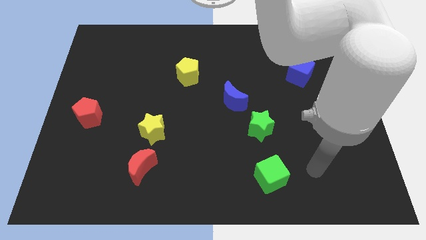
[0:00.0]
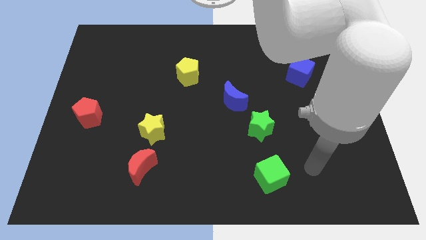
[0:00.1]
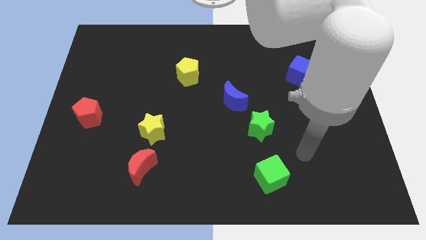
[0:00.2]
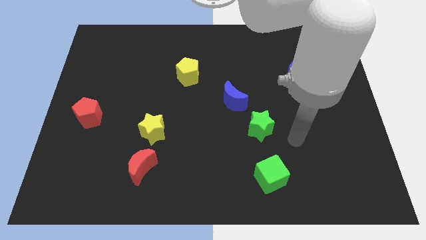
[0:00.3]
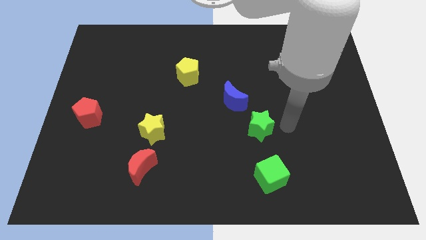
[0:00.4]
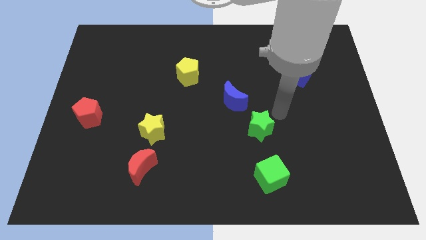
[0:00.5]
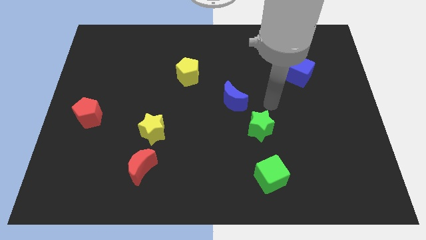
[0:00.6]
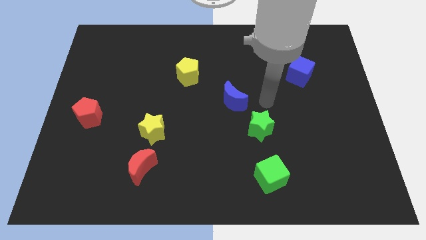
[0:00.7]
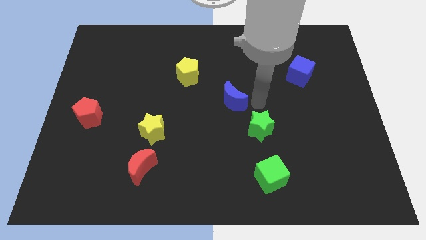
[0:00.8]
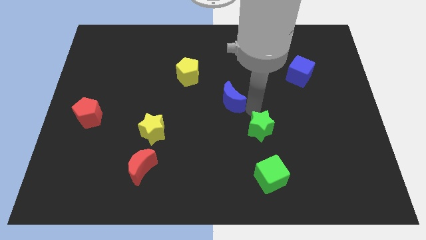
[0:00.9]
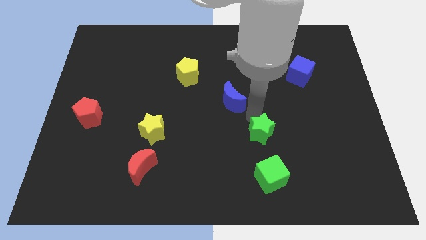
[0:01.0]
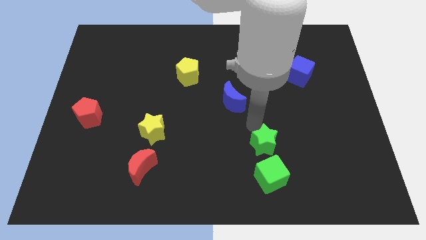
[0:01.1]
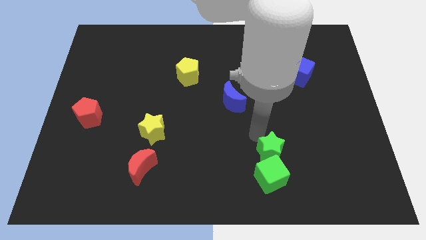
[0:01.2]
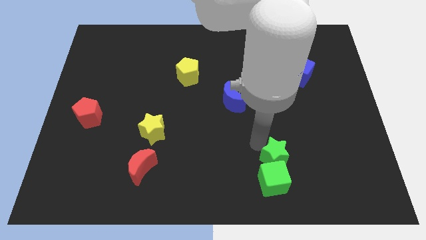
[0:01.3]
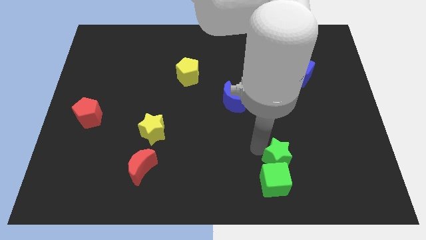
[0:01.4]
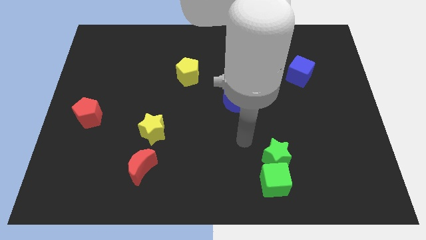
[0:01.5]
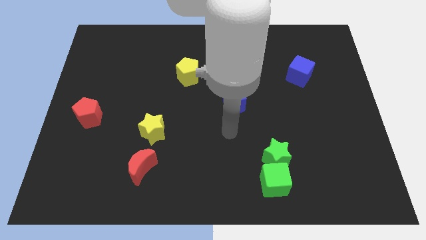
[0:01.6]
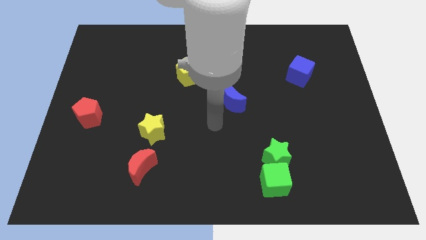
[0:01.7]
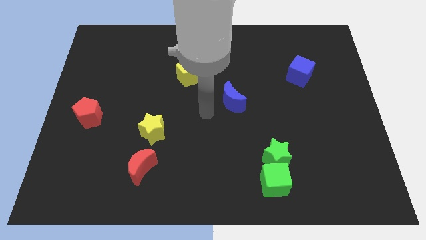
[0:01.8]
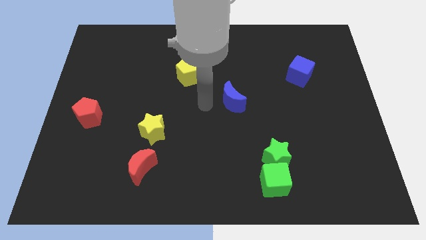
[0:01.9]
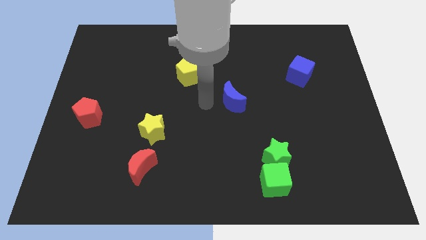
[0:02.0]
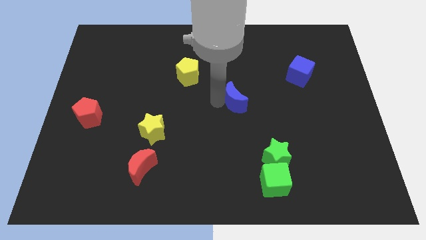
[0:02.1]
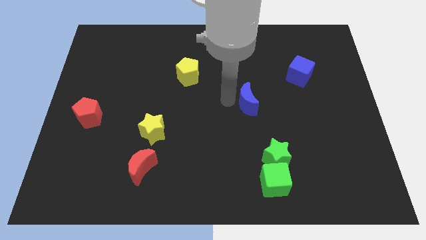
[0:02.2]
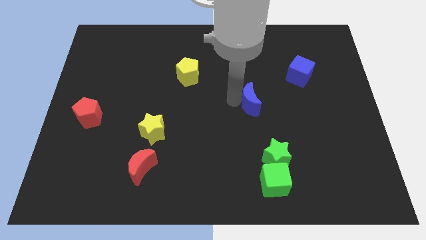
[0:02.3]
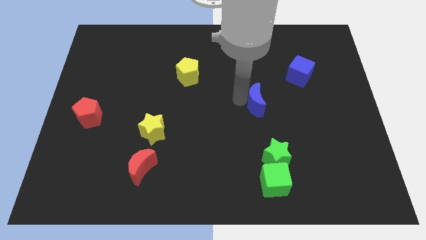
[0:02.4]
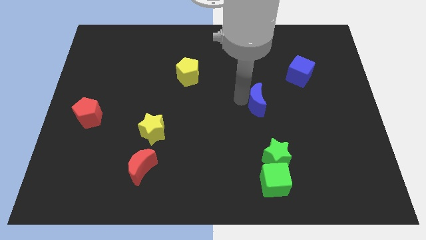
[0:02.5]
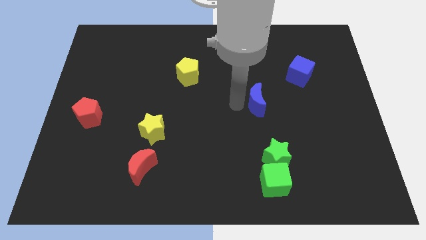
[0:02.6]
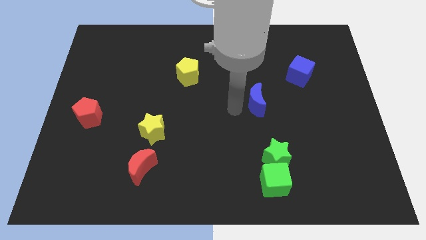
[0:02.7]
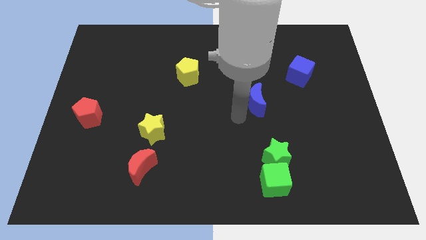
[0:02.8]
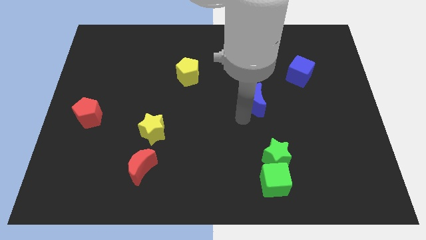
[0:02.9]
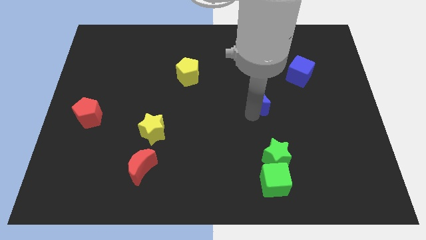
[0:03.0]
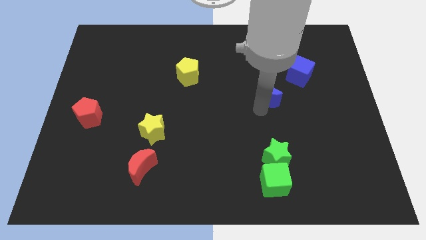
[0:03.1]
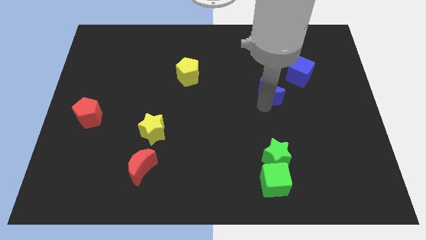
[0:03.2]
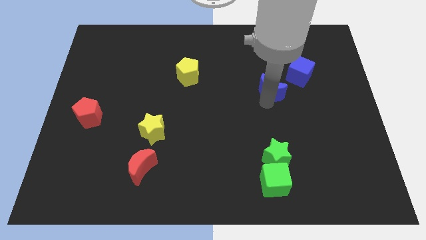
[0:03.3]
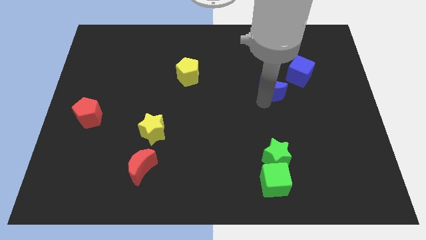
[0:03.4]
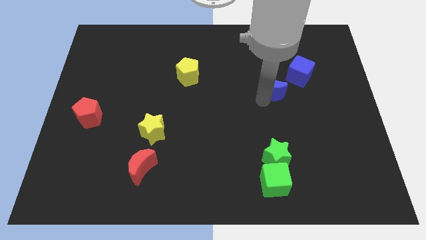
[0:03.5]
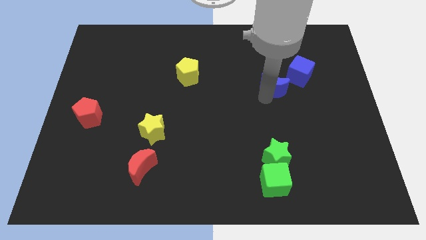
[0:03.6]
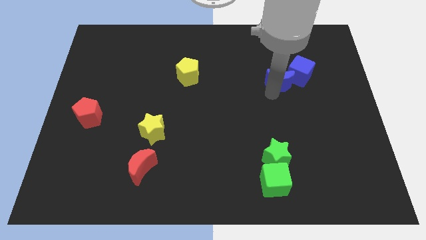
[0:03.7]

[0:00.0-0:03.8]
group up green and blue blocks separately

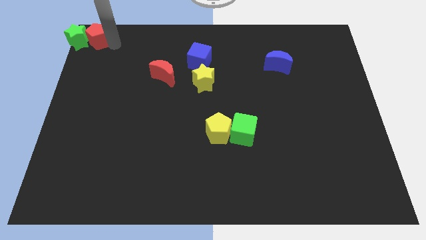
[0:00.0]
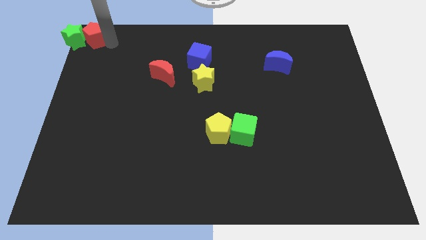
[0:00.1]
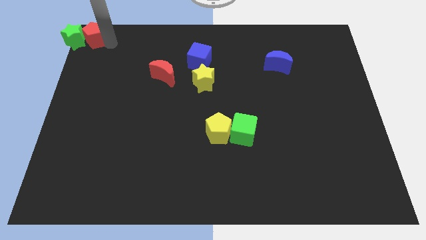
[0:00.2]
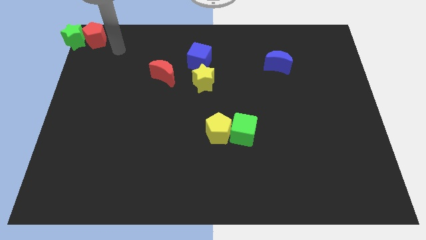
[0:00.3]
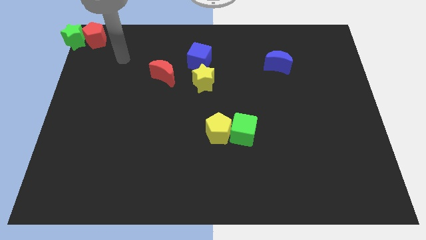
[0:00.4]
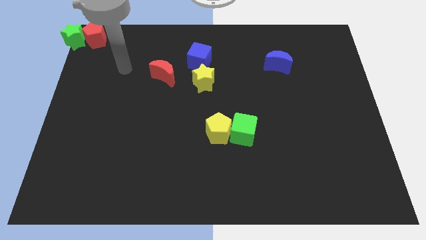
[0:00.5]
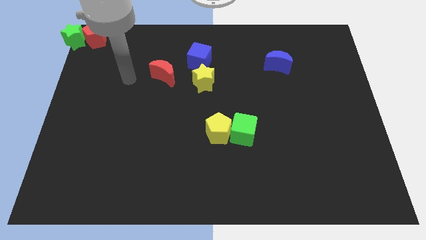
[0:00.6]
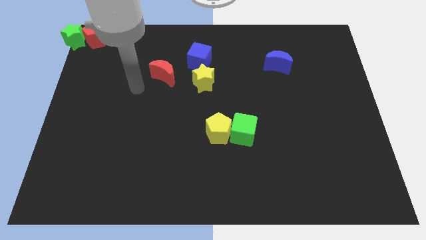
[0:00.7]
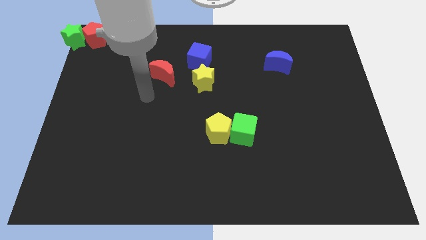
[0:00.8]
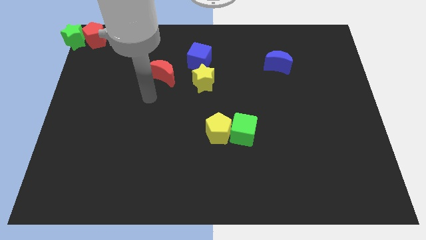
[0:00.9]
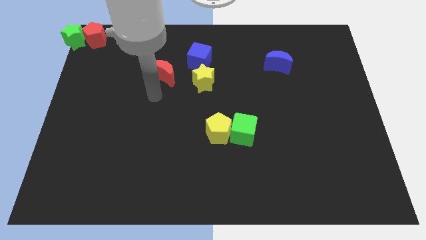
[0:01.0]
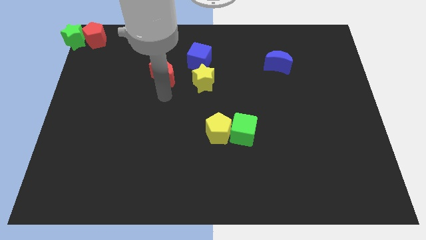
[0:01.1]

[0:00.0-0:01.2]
point your arm at the bottom of red moon

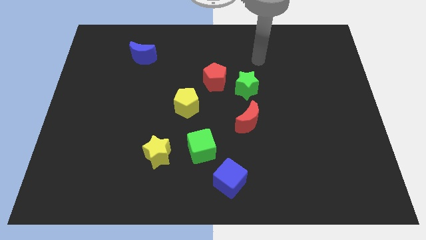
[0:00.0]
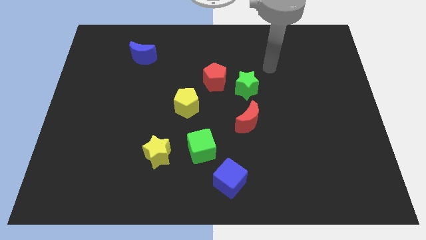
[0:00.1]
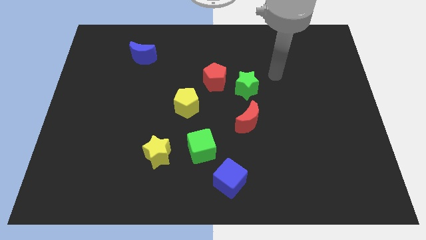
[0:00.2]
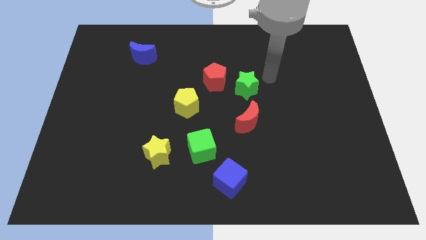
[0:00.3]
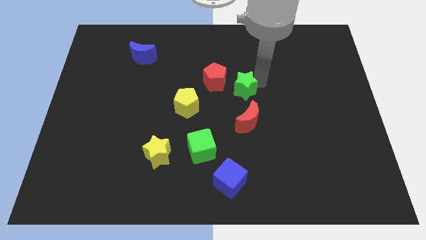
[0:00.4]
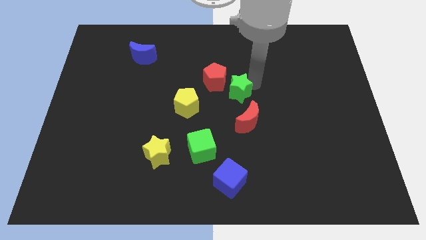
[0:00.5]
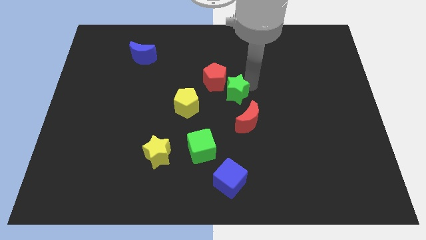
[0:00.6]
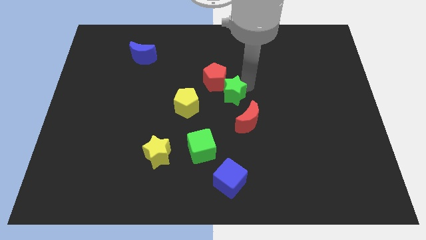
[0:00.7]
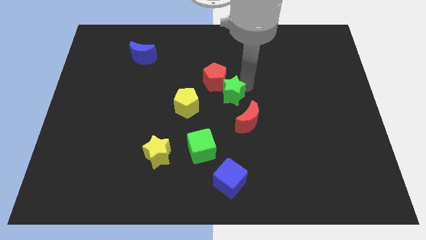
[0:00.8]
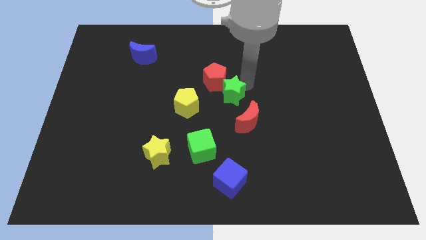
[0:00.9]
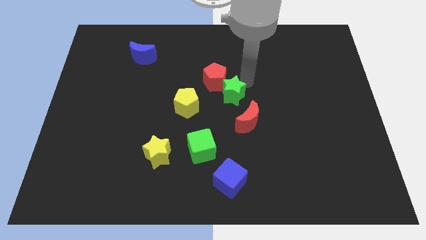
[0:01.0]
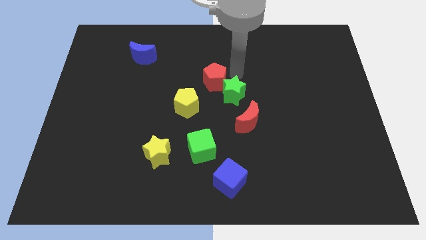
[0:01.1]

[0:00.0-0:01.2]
move the green star to the bottom right side of the red pentagon

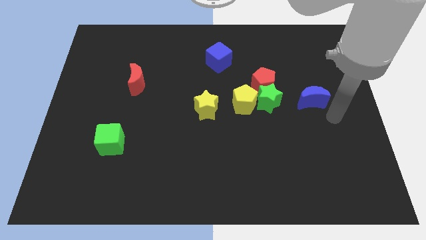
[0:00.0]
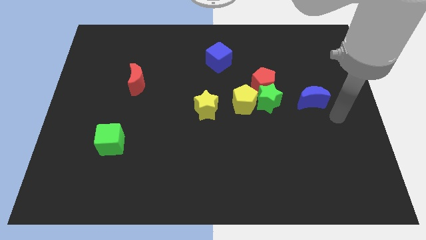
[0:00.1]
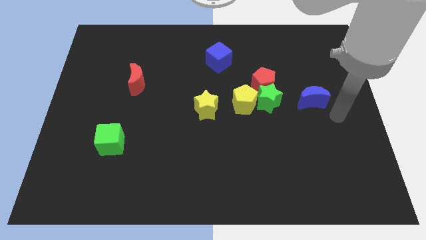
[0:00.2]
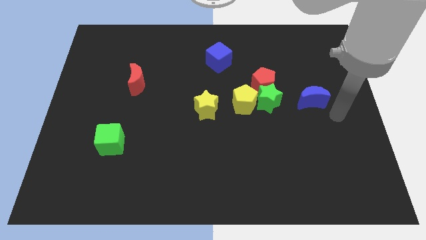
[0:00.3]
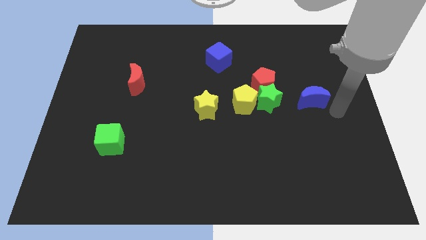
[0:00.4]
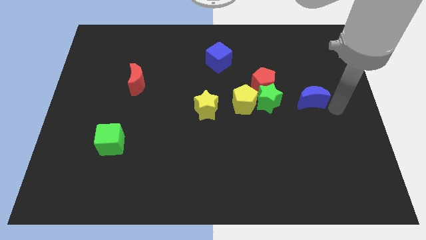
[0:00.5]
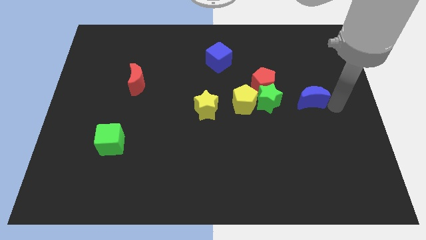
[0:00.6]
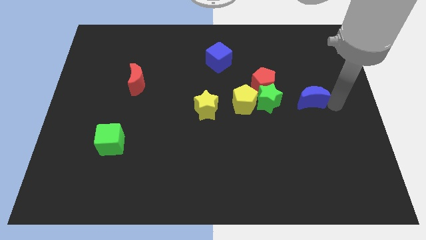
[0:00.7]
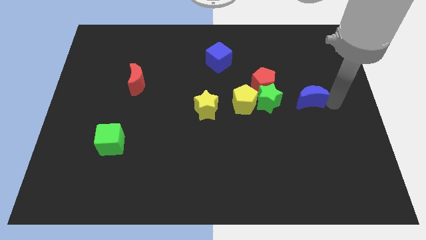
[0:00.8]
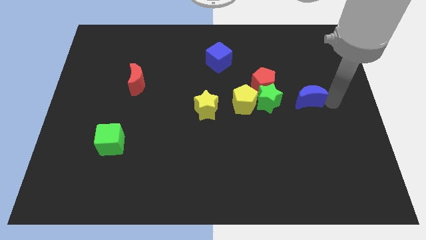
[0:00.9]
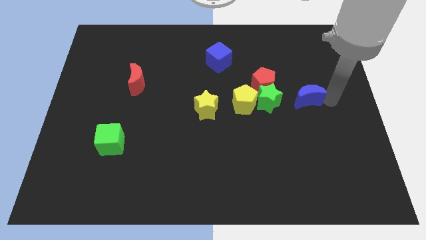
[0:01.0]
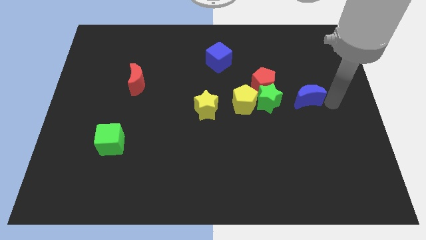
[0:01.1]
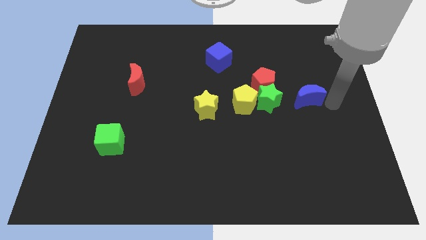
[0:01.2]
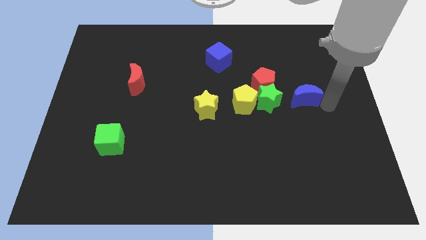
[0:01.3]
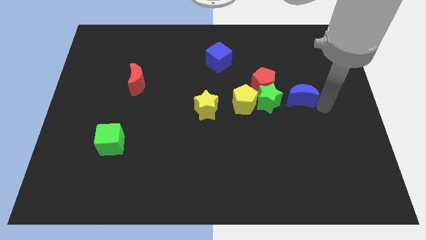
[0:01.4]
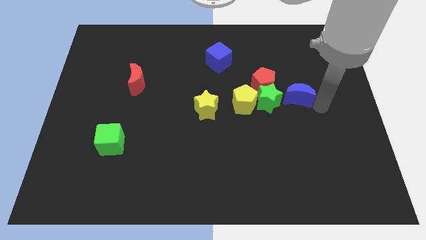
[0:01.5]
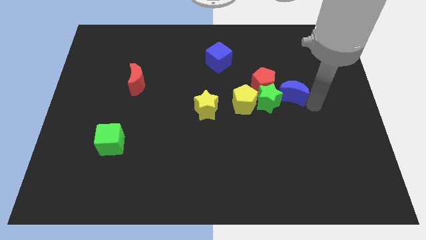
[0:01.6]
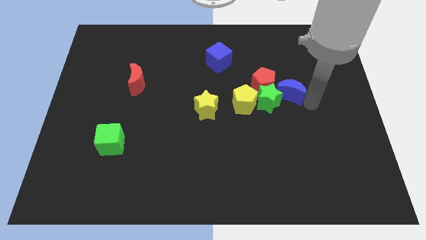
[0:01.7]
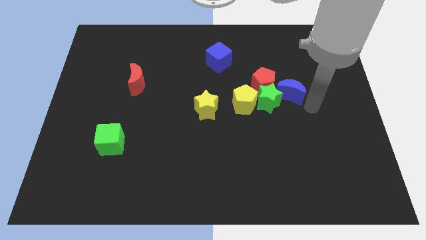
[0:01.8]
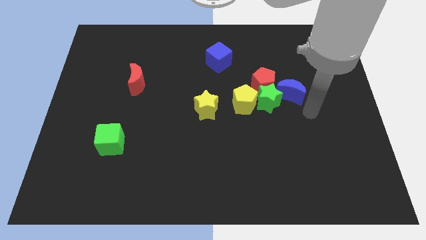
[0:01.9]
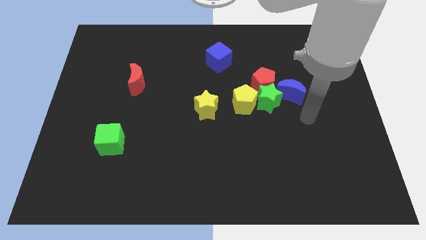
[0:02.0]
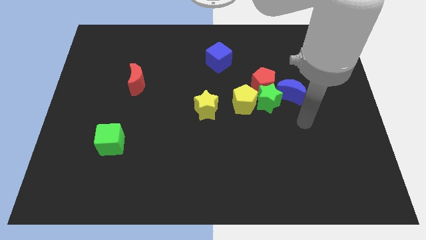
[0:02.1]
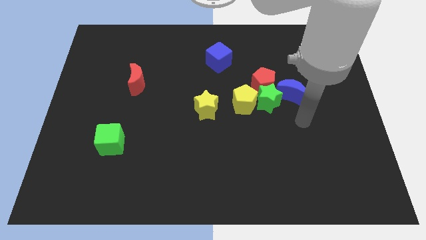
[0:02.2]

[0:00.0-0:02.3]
move the blue moon right beside the green star

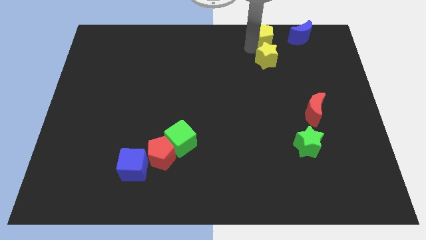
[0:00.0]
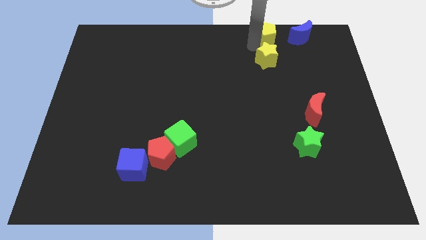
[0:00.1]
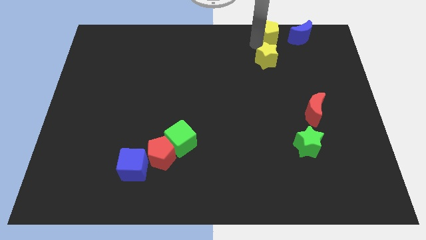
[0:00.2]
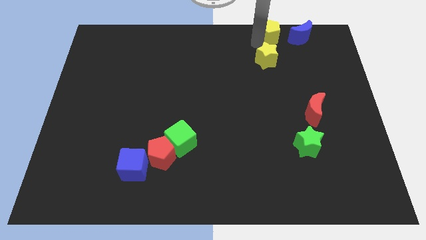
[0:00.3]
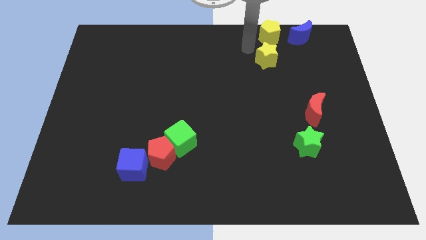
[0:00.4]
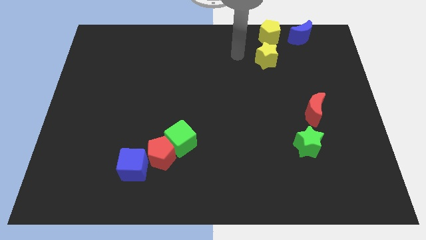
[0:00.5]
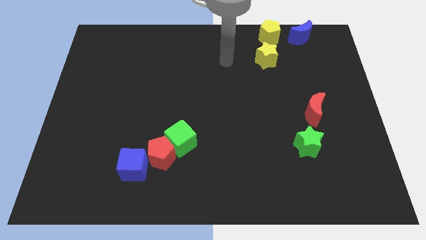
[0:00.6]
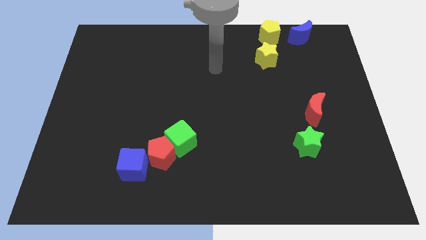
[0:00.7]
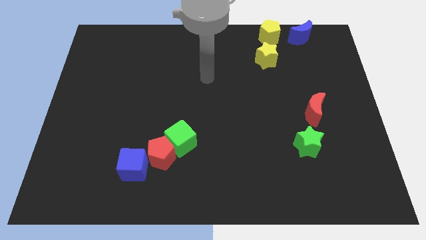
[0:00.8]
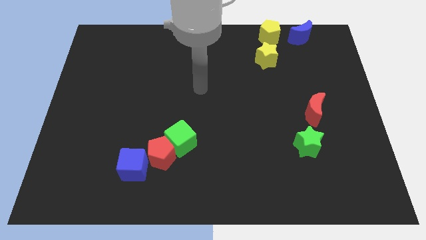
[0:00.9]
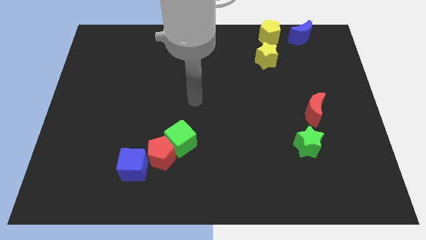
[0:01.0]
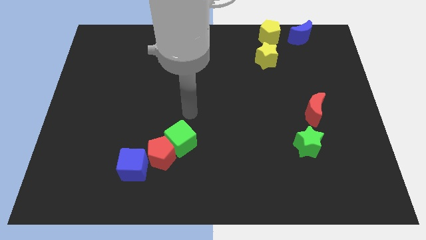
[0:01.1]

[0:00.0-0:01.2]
move the arm away from the yellow pentagon
